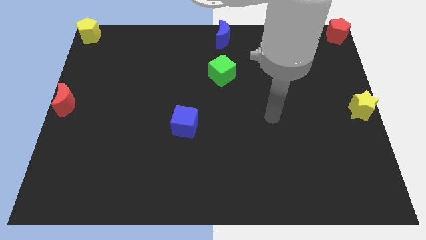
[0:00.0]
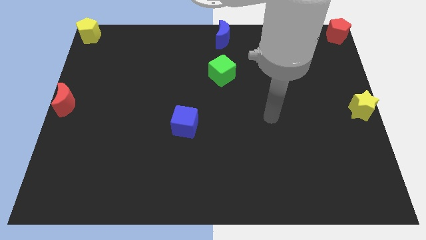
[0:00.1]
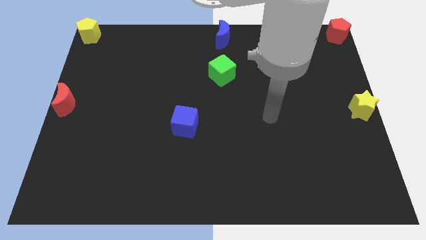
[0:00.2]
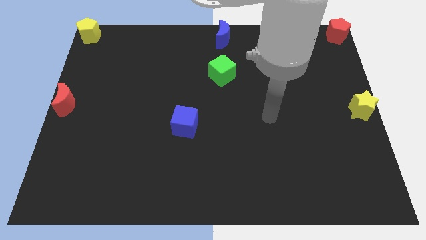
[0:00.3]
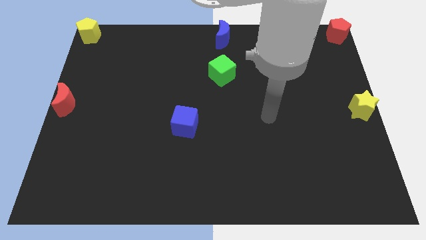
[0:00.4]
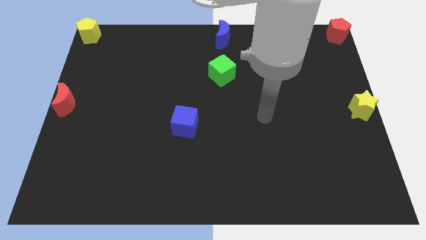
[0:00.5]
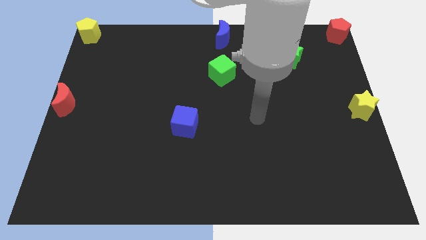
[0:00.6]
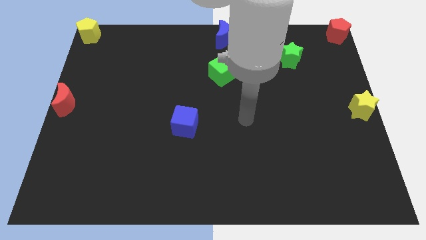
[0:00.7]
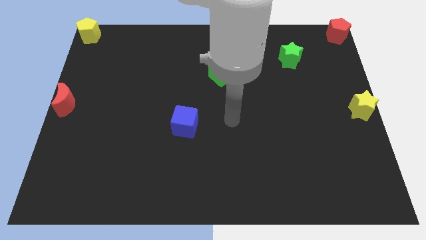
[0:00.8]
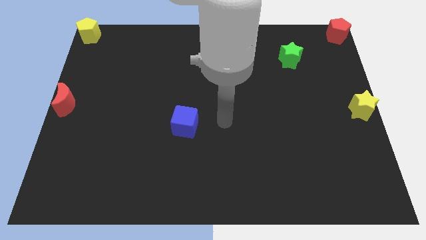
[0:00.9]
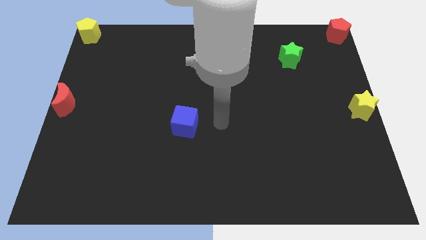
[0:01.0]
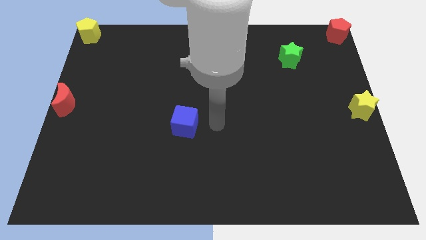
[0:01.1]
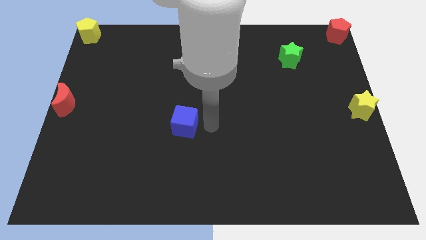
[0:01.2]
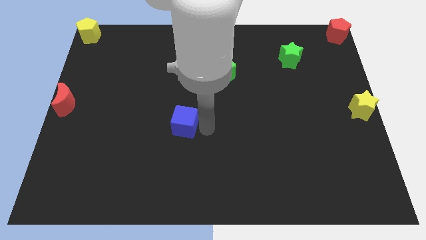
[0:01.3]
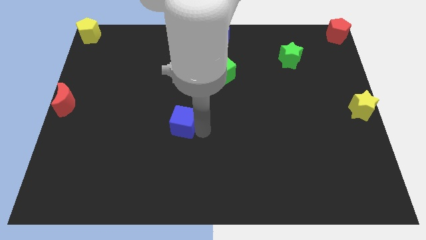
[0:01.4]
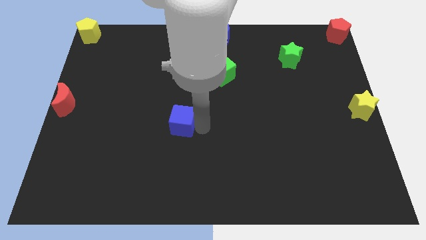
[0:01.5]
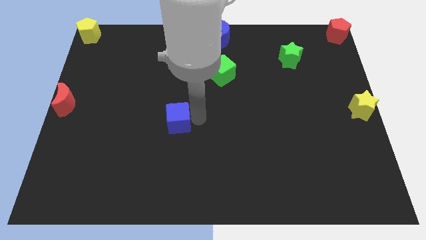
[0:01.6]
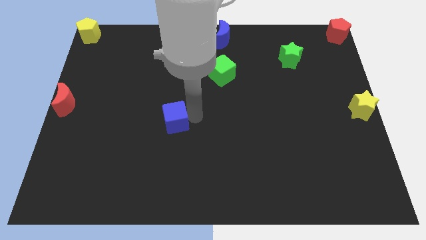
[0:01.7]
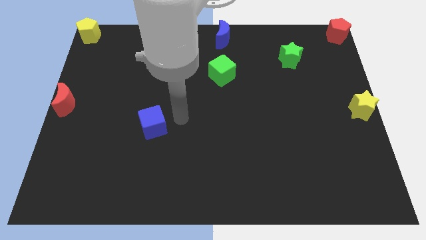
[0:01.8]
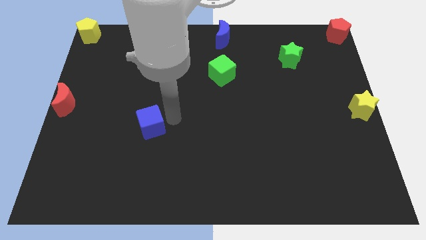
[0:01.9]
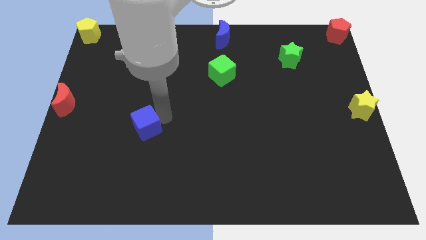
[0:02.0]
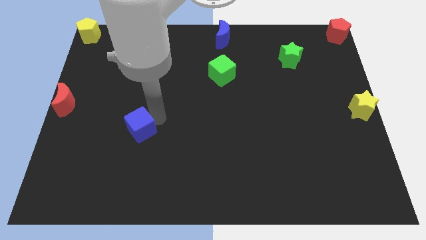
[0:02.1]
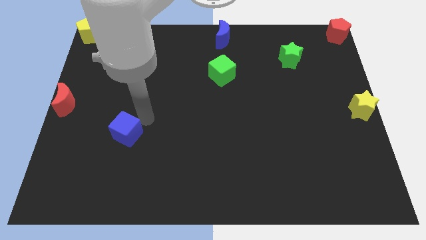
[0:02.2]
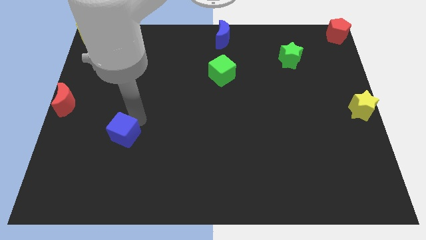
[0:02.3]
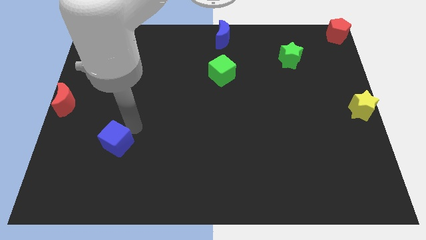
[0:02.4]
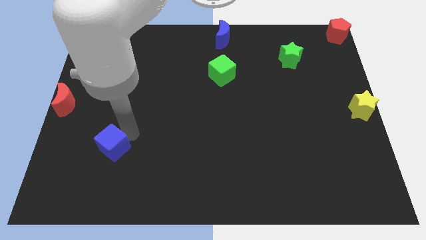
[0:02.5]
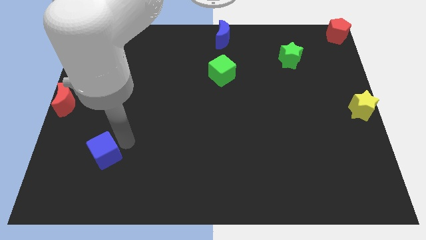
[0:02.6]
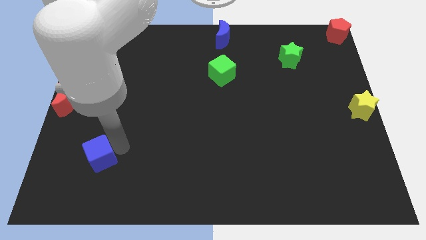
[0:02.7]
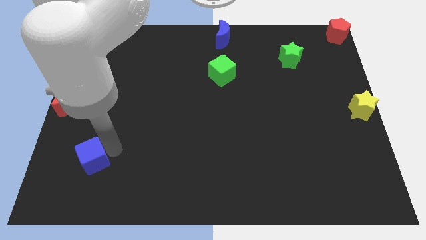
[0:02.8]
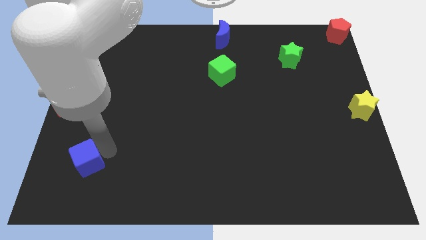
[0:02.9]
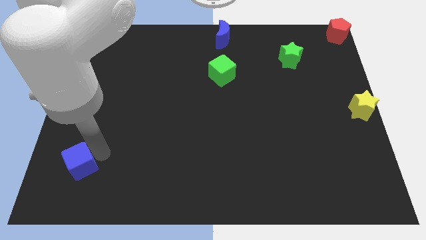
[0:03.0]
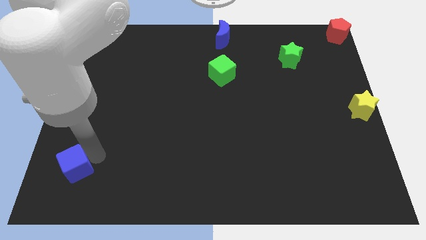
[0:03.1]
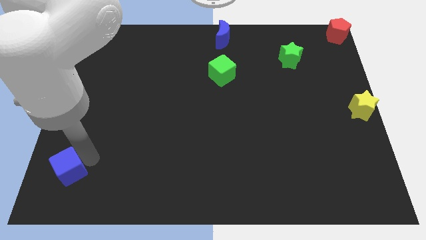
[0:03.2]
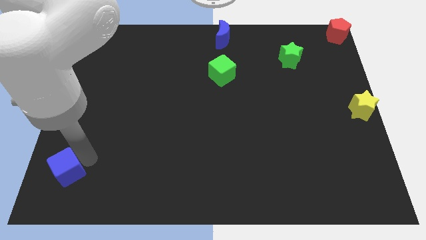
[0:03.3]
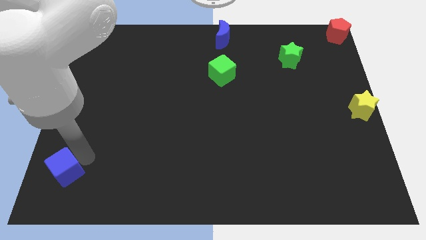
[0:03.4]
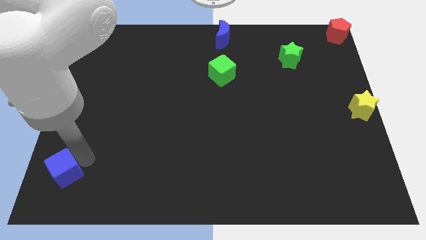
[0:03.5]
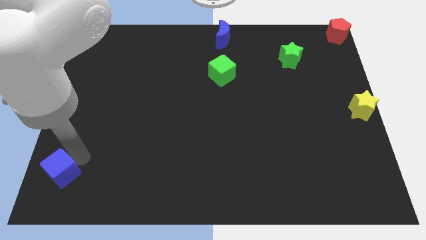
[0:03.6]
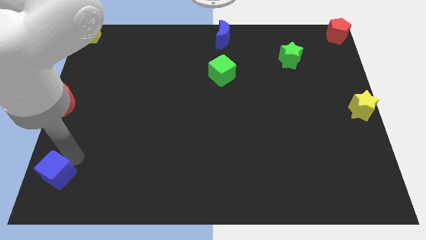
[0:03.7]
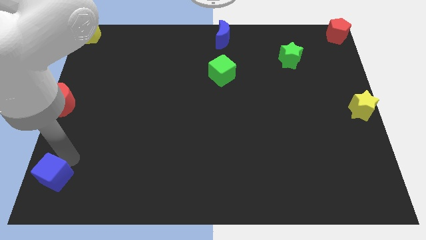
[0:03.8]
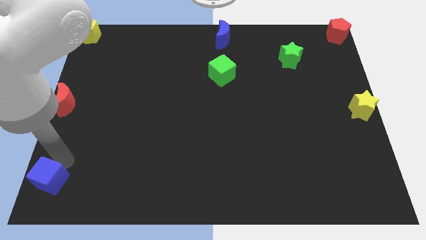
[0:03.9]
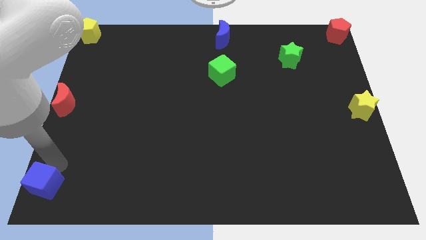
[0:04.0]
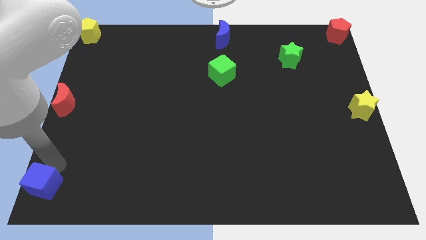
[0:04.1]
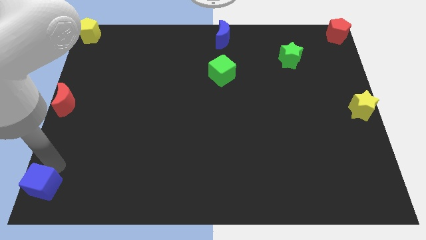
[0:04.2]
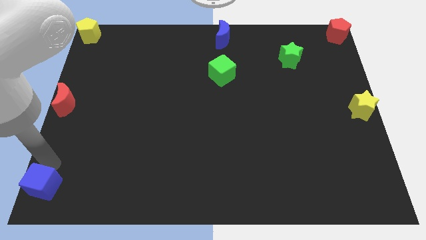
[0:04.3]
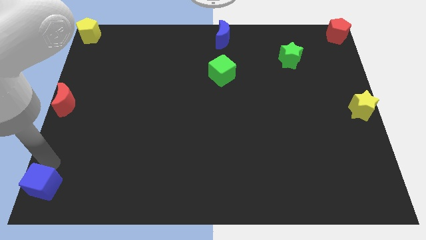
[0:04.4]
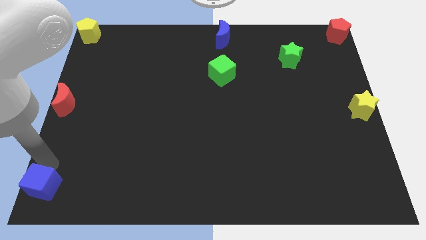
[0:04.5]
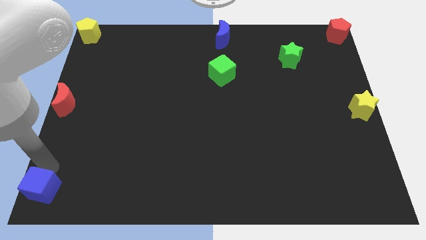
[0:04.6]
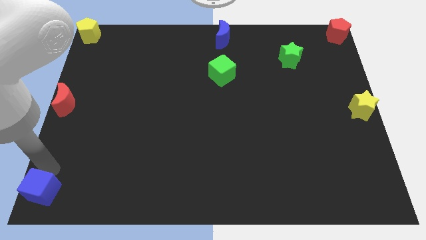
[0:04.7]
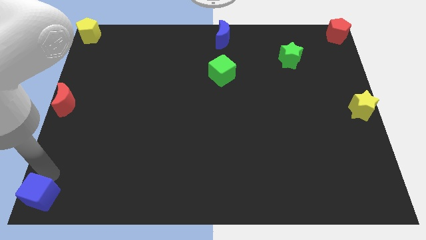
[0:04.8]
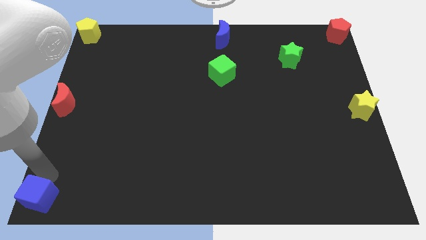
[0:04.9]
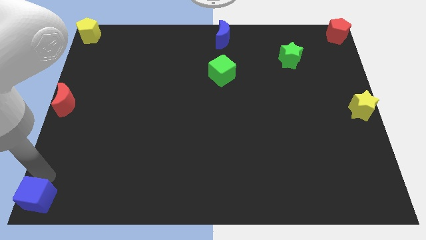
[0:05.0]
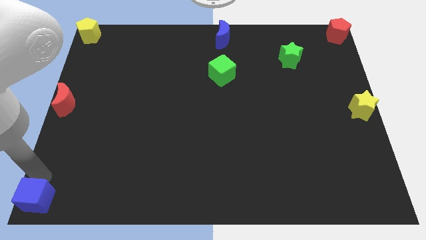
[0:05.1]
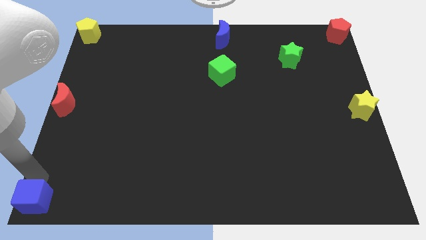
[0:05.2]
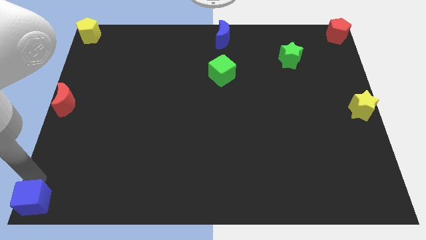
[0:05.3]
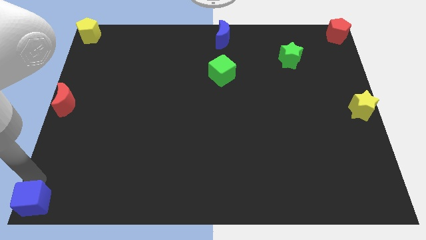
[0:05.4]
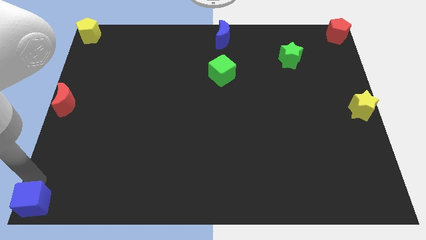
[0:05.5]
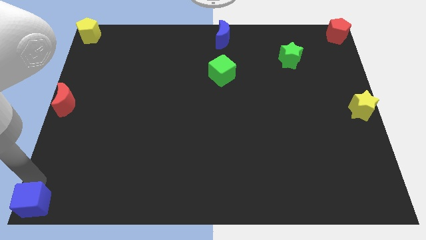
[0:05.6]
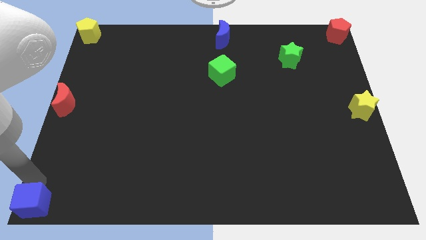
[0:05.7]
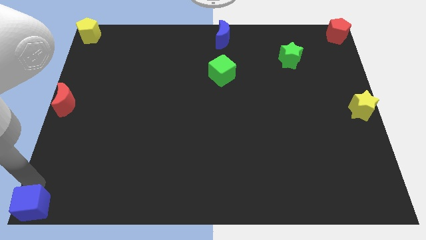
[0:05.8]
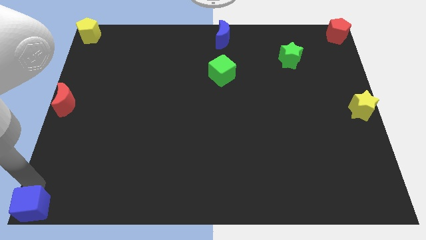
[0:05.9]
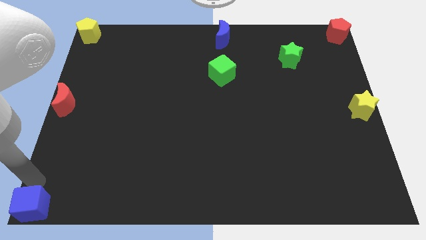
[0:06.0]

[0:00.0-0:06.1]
push the blue cube to the bottom left of the board

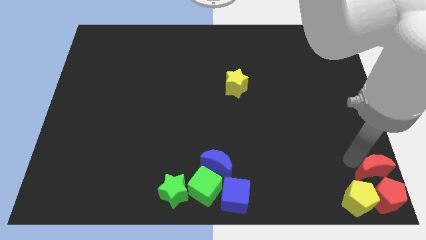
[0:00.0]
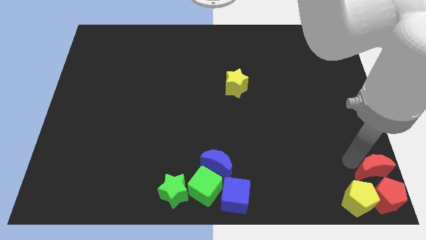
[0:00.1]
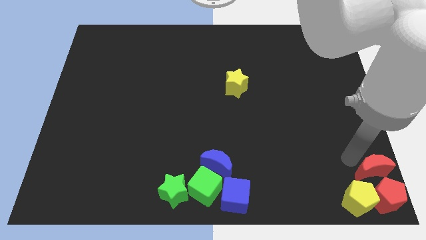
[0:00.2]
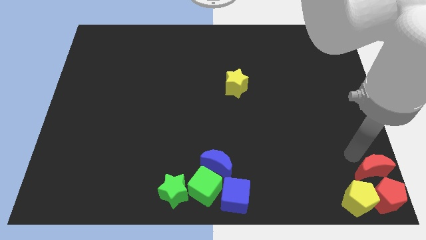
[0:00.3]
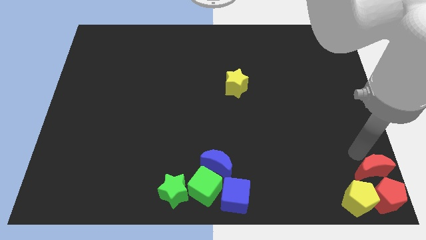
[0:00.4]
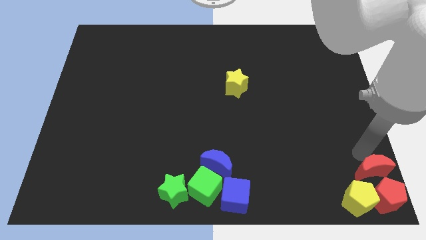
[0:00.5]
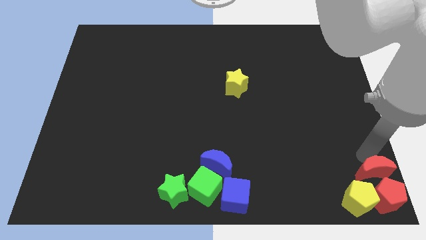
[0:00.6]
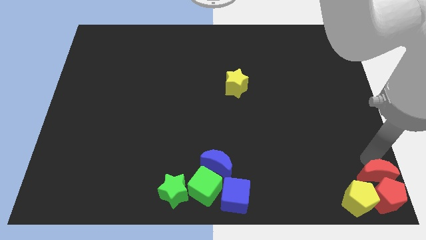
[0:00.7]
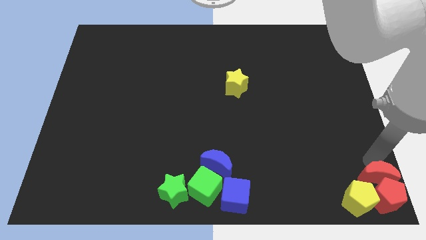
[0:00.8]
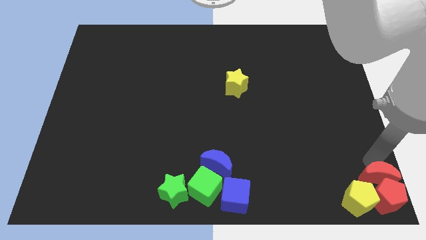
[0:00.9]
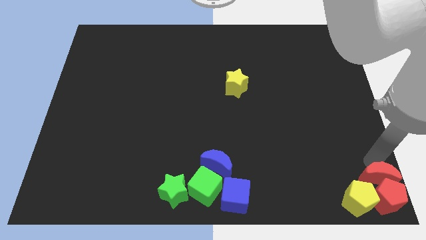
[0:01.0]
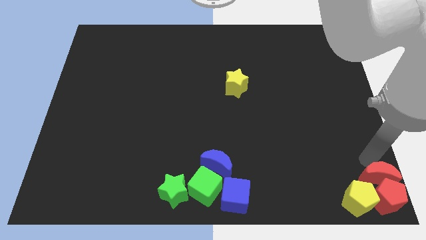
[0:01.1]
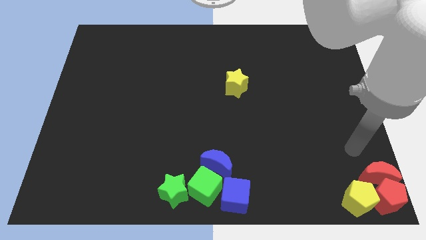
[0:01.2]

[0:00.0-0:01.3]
place the red crescent at the top of red pentagon

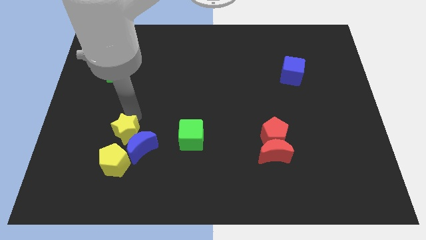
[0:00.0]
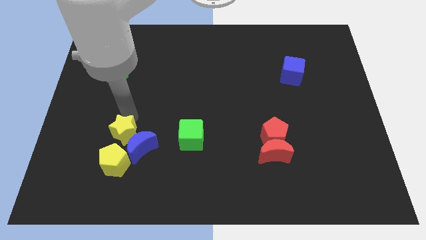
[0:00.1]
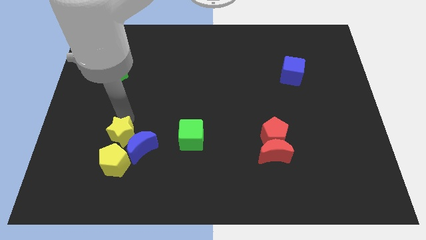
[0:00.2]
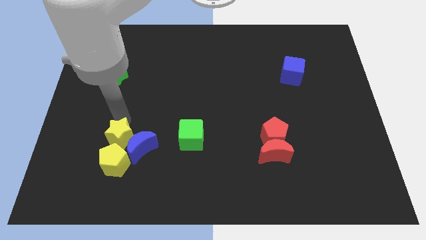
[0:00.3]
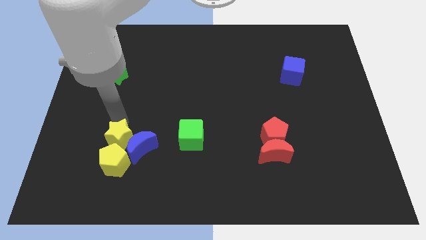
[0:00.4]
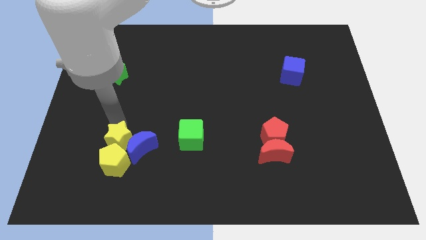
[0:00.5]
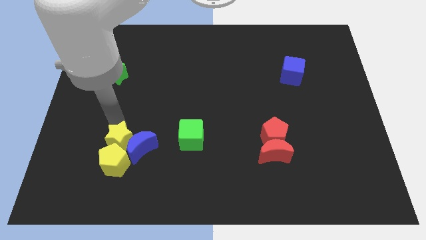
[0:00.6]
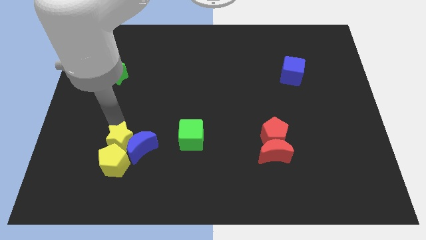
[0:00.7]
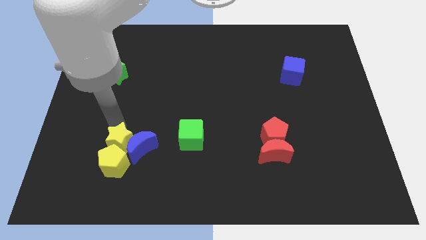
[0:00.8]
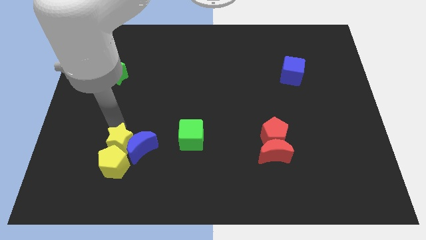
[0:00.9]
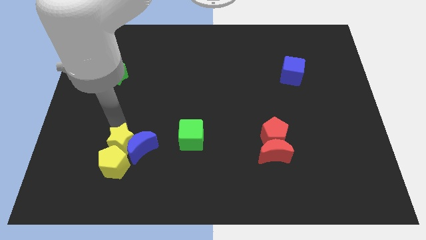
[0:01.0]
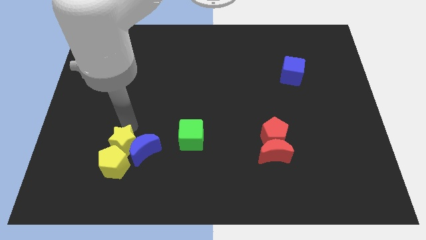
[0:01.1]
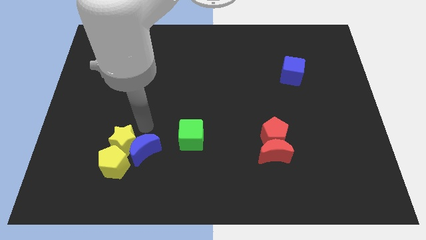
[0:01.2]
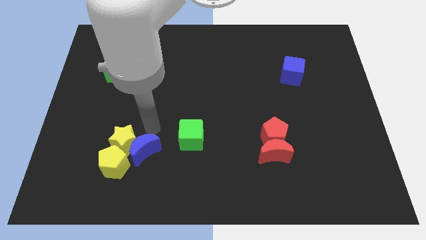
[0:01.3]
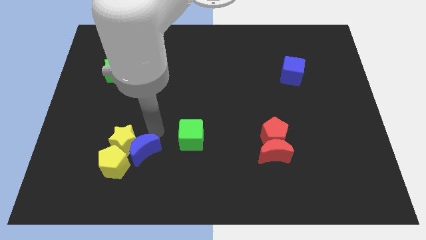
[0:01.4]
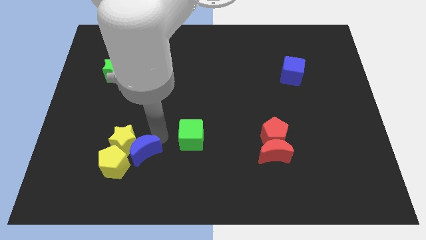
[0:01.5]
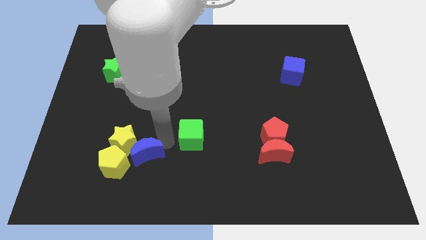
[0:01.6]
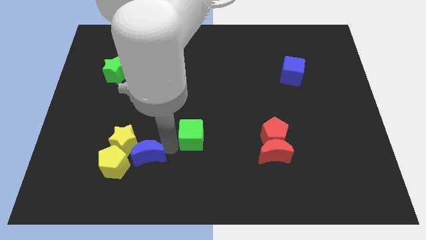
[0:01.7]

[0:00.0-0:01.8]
slightly move the yellow star and blue crescent towards bottom
